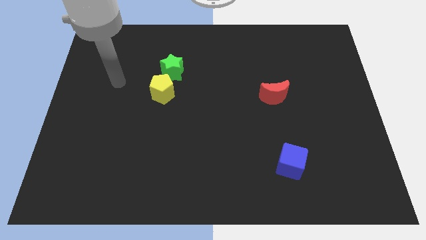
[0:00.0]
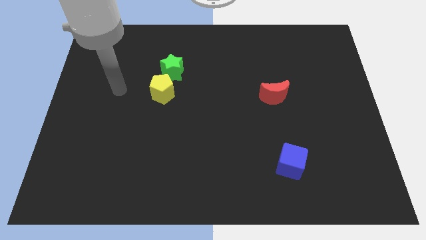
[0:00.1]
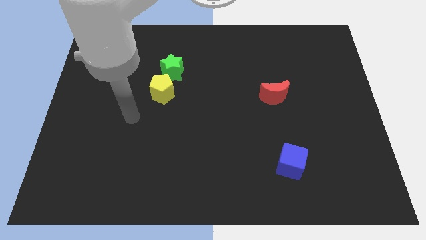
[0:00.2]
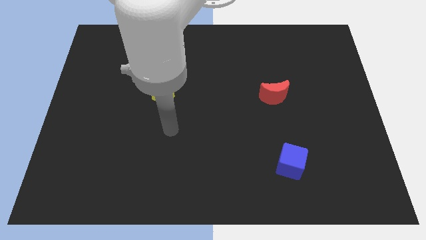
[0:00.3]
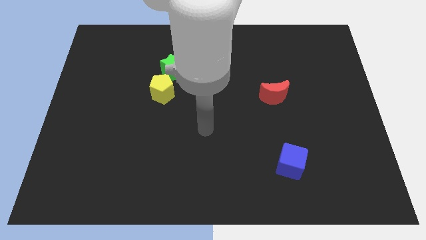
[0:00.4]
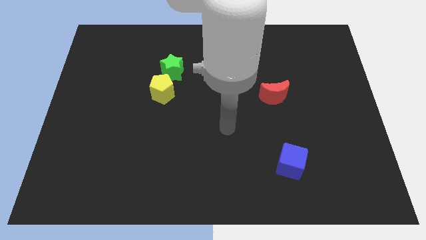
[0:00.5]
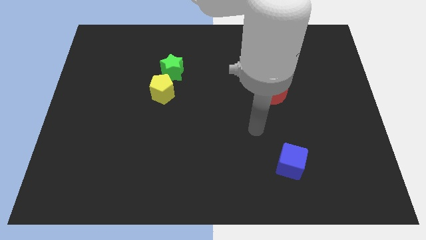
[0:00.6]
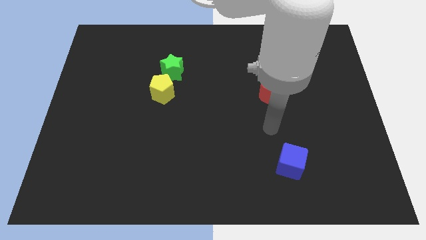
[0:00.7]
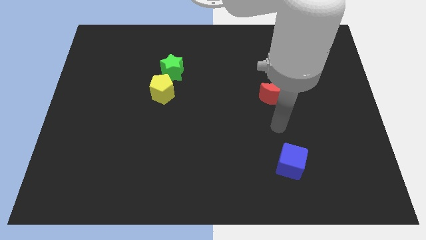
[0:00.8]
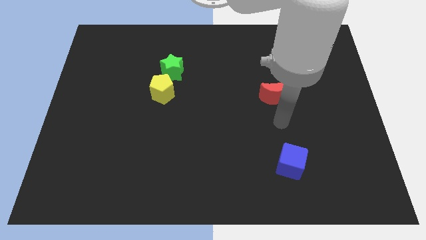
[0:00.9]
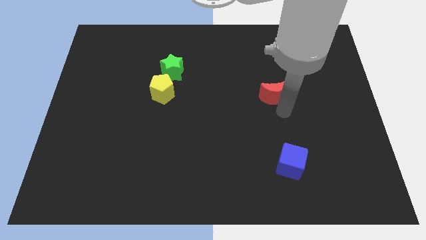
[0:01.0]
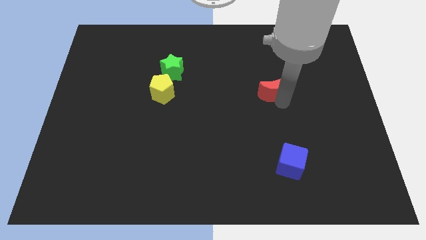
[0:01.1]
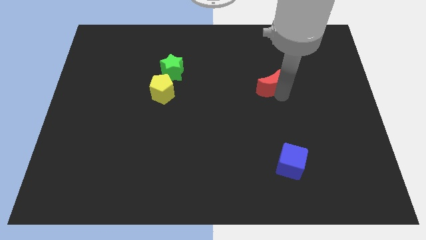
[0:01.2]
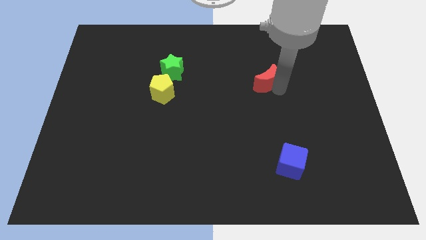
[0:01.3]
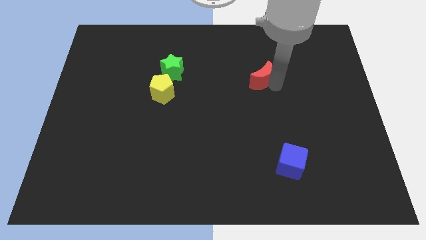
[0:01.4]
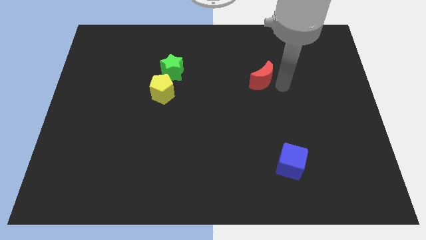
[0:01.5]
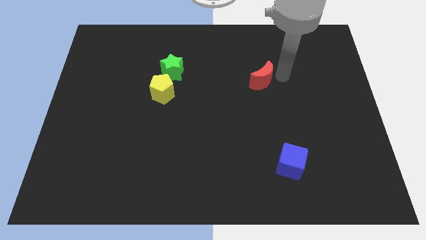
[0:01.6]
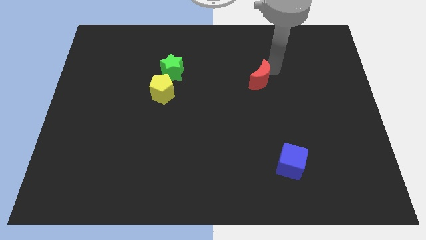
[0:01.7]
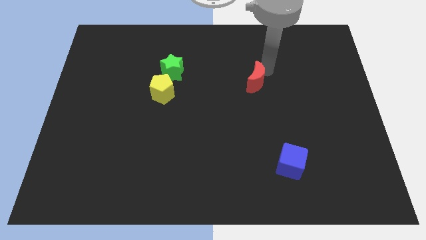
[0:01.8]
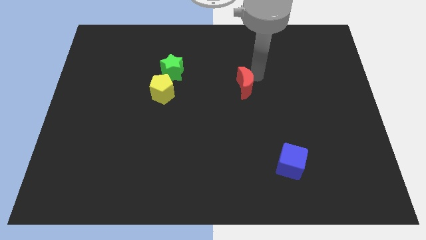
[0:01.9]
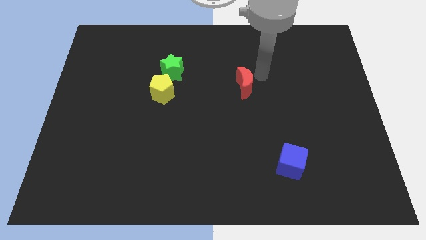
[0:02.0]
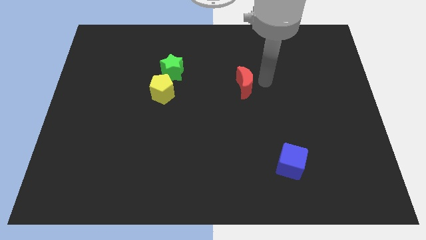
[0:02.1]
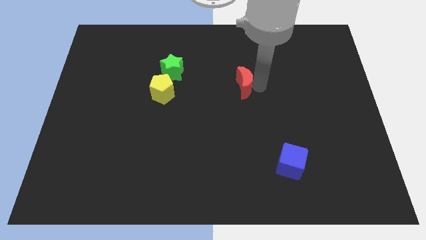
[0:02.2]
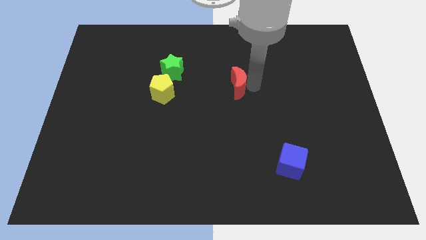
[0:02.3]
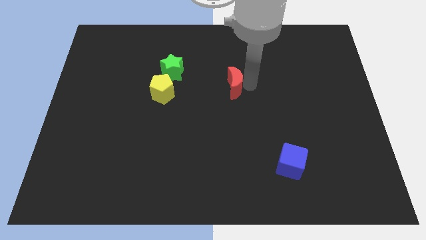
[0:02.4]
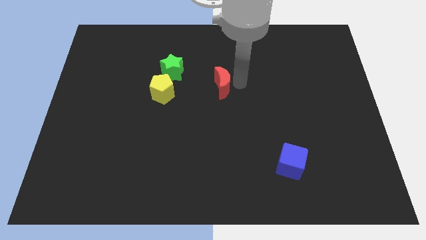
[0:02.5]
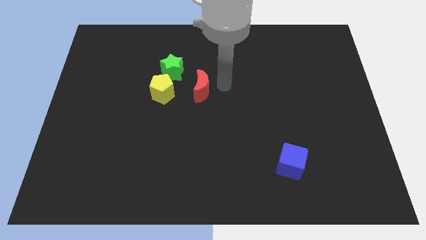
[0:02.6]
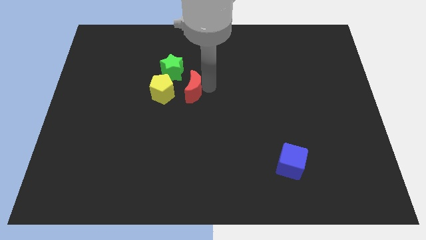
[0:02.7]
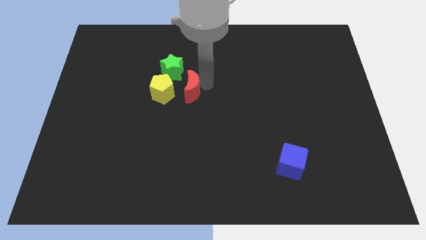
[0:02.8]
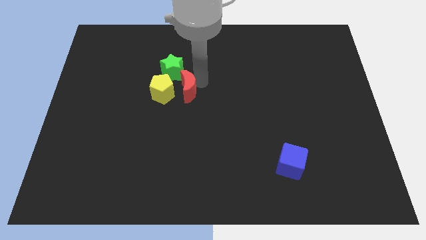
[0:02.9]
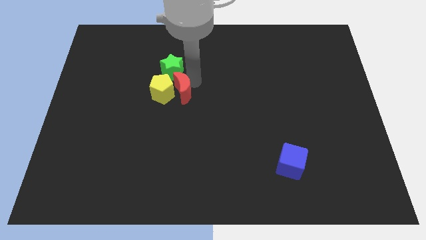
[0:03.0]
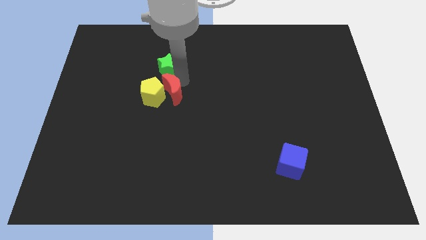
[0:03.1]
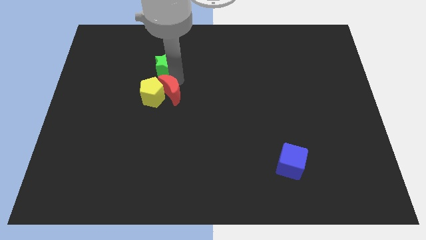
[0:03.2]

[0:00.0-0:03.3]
move the red block next to the yellow block

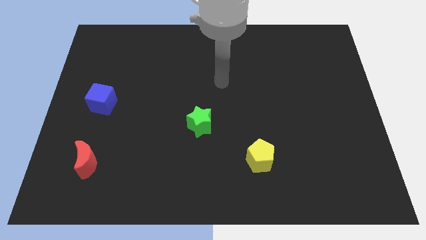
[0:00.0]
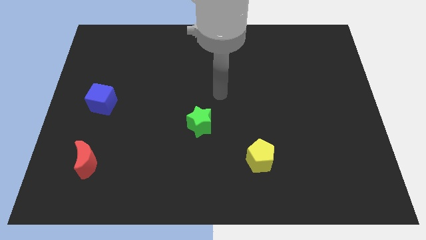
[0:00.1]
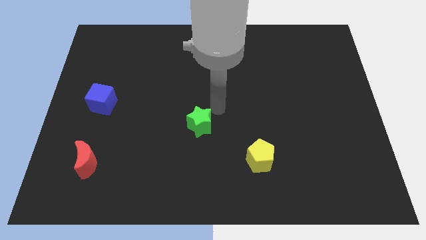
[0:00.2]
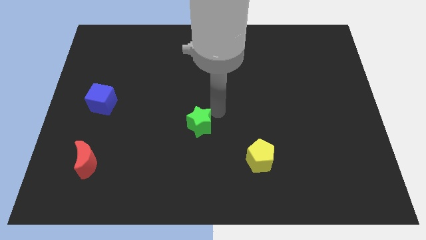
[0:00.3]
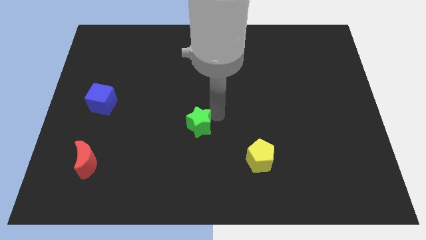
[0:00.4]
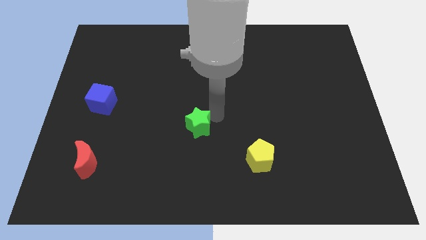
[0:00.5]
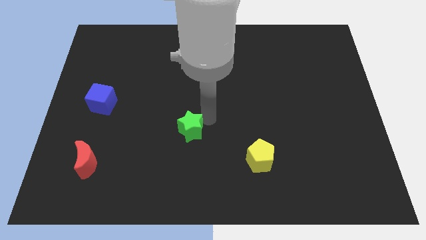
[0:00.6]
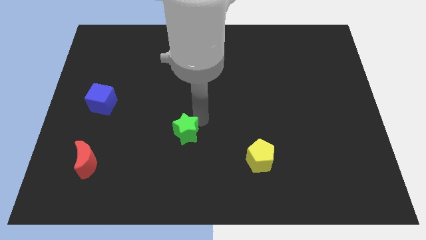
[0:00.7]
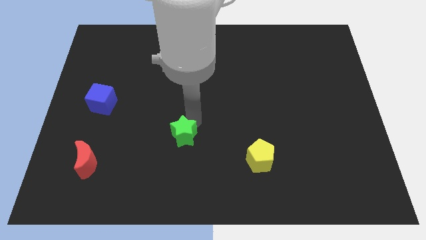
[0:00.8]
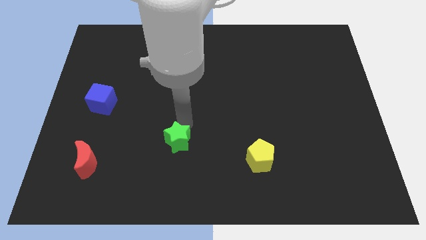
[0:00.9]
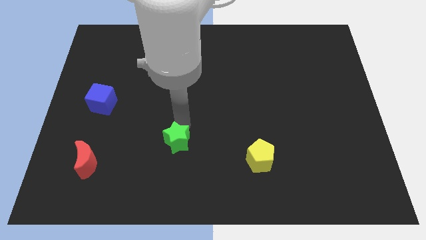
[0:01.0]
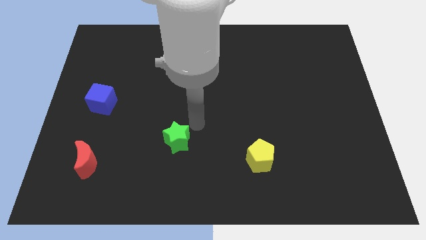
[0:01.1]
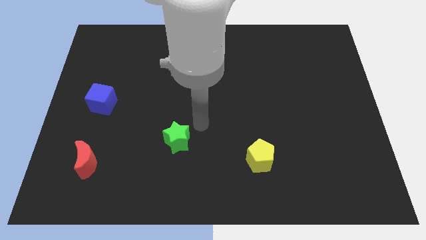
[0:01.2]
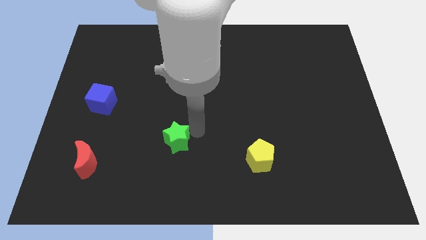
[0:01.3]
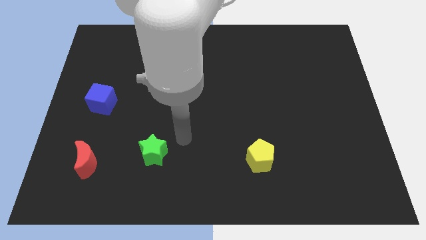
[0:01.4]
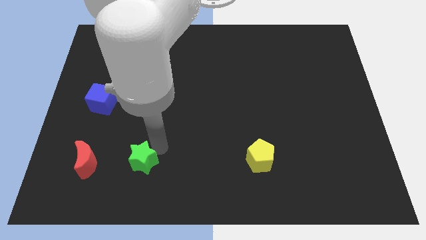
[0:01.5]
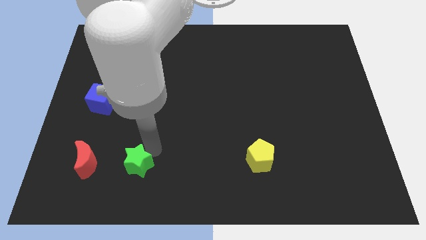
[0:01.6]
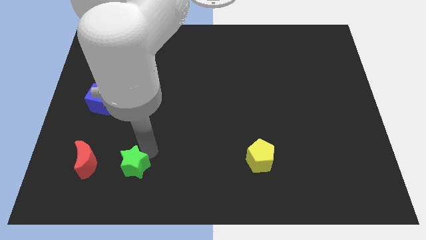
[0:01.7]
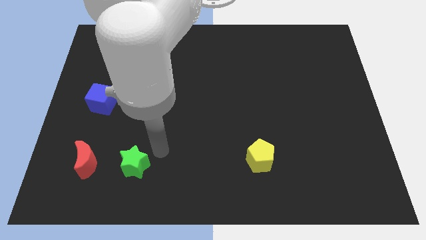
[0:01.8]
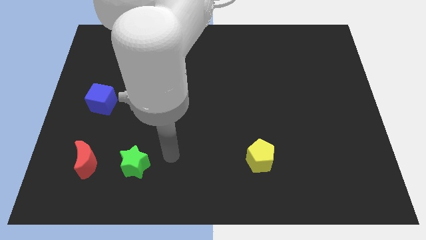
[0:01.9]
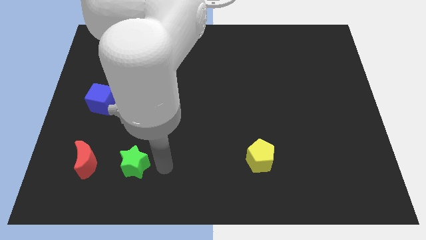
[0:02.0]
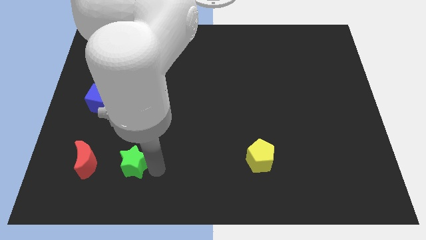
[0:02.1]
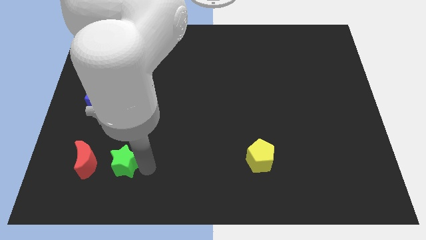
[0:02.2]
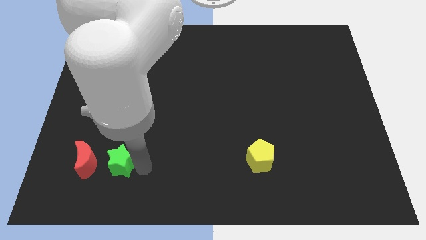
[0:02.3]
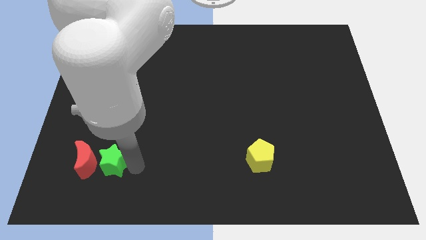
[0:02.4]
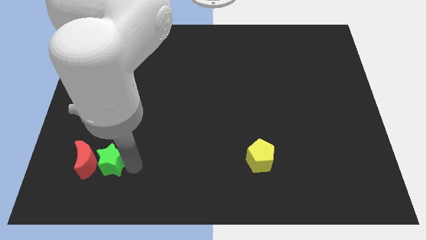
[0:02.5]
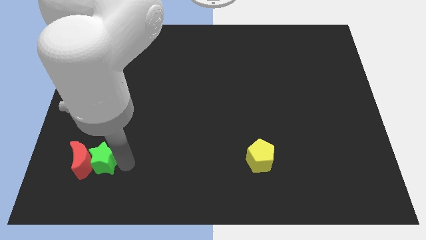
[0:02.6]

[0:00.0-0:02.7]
move the star towards the red moon

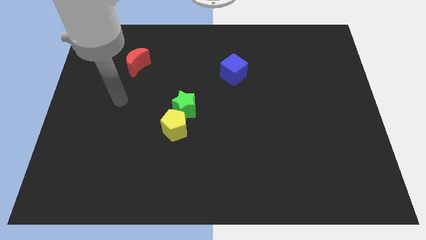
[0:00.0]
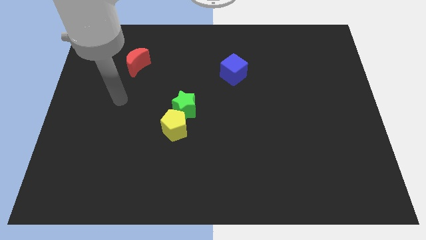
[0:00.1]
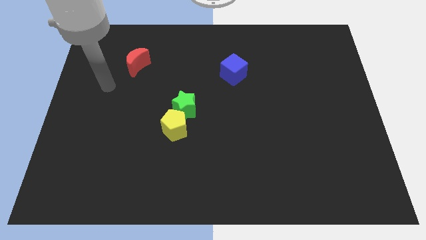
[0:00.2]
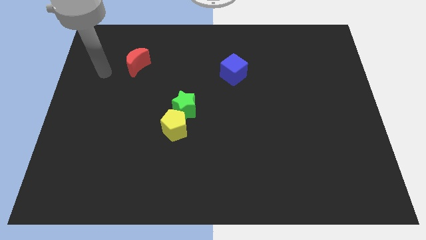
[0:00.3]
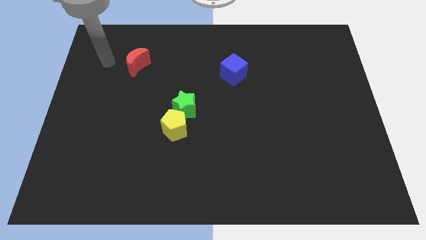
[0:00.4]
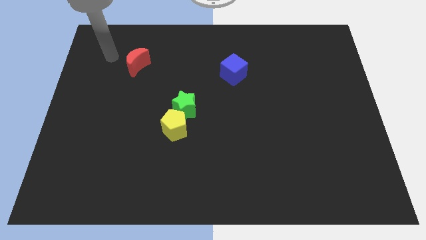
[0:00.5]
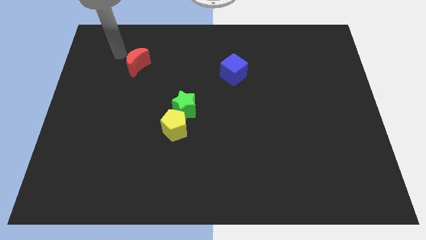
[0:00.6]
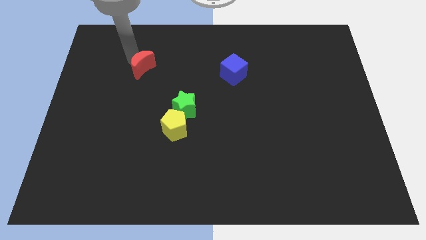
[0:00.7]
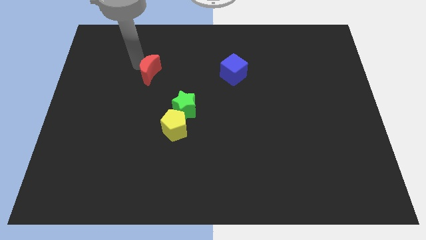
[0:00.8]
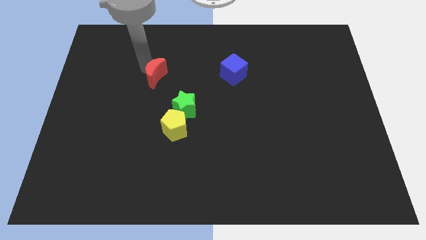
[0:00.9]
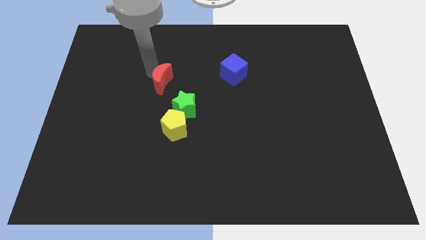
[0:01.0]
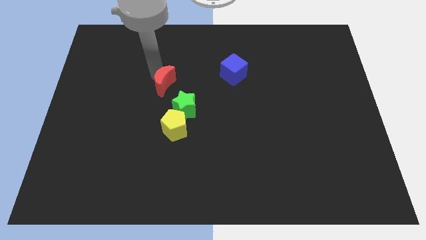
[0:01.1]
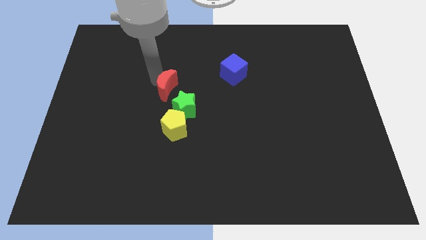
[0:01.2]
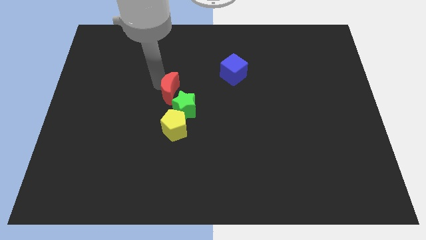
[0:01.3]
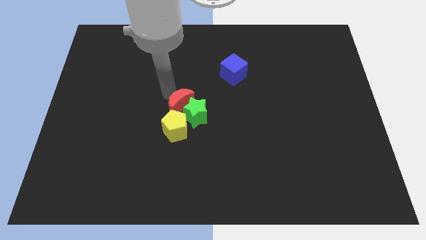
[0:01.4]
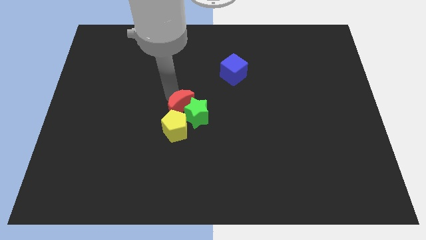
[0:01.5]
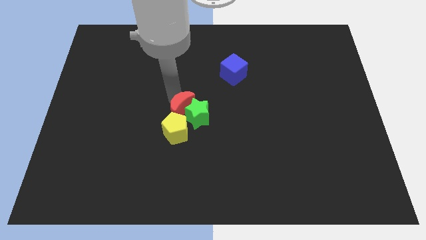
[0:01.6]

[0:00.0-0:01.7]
push the red moon next to the star

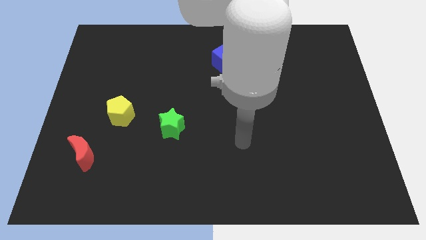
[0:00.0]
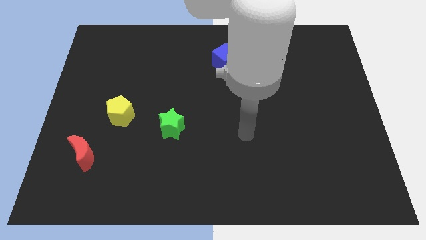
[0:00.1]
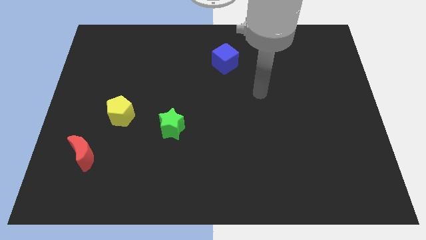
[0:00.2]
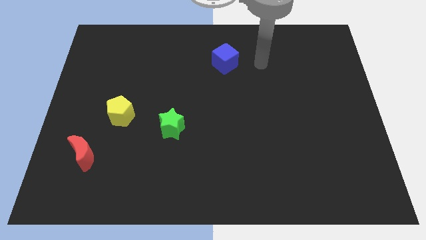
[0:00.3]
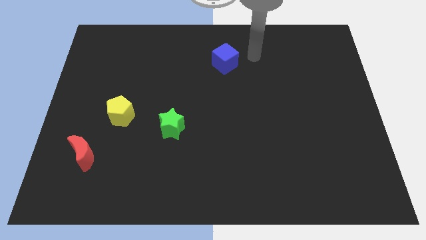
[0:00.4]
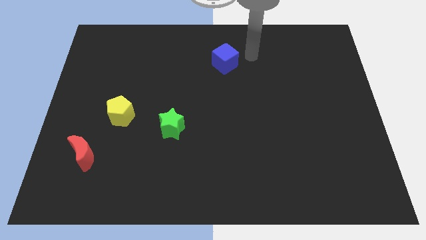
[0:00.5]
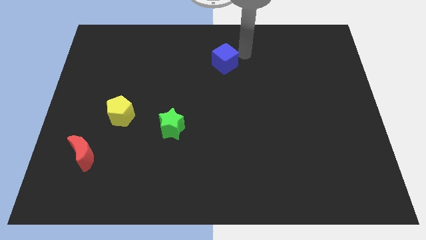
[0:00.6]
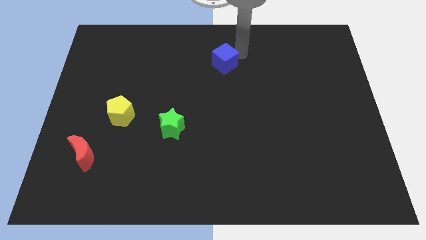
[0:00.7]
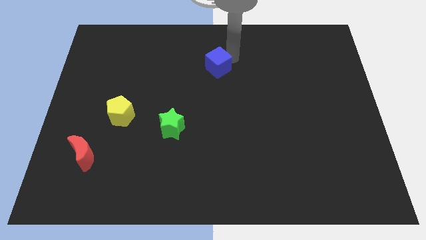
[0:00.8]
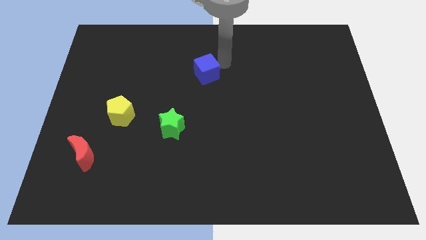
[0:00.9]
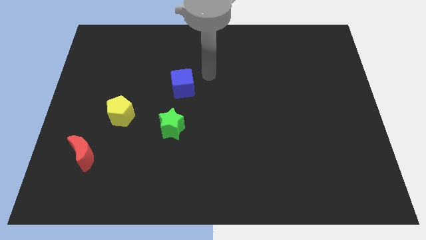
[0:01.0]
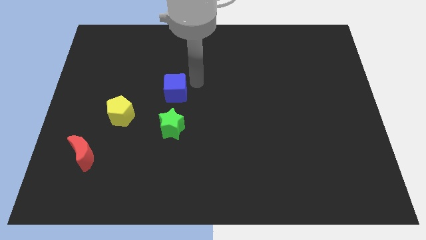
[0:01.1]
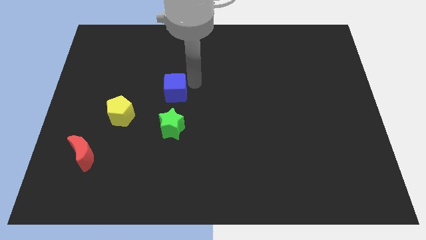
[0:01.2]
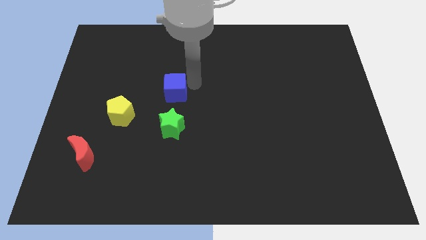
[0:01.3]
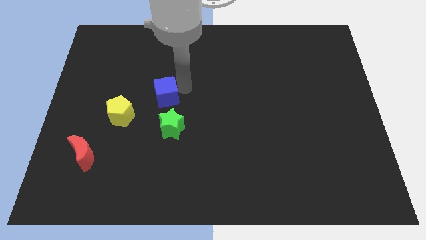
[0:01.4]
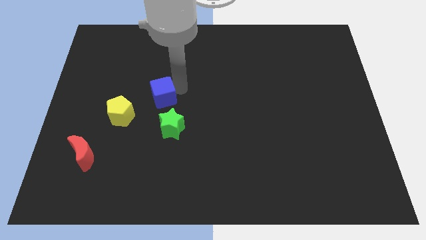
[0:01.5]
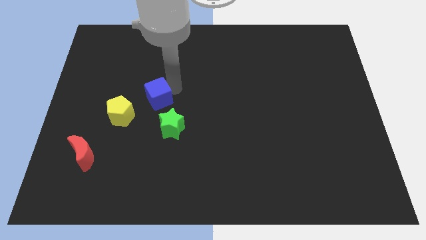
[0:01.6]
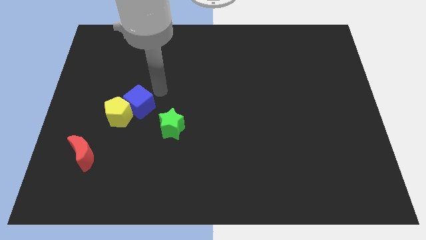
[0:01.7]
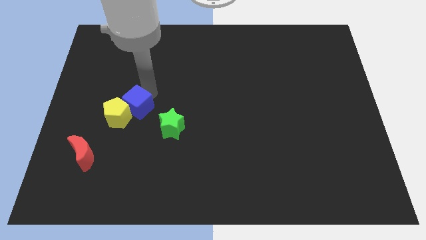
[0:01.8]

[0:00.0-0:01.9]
push the cube towards the yellow block
